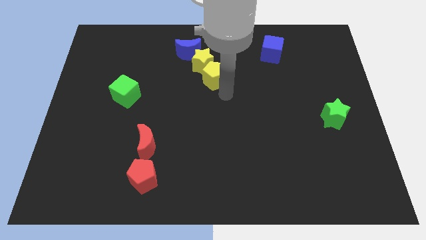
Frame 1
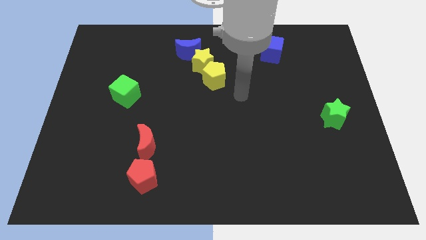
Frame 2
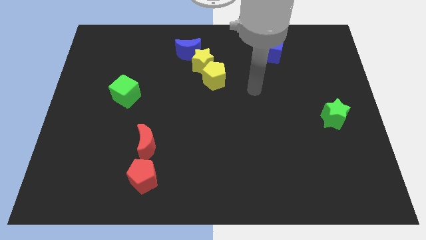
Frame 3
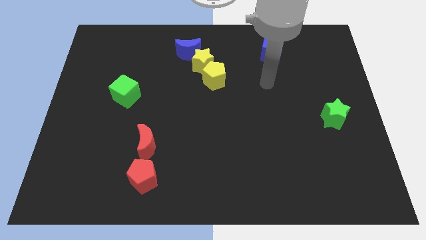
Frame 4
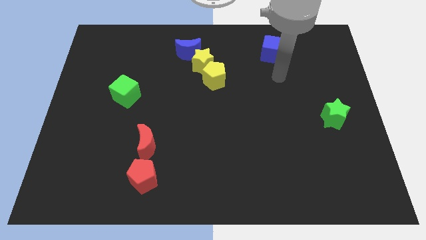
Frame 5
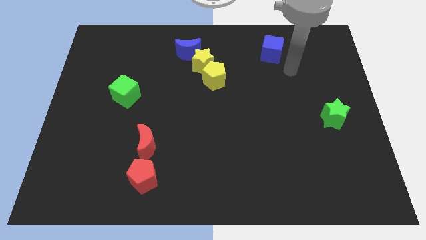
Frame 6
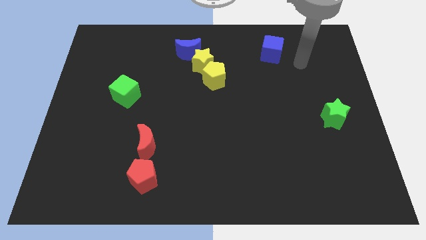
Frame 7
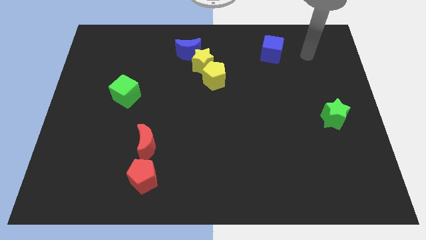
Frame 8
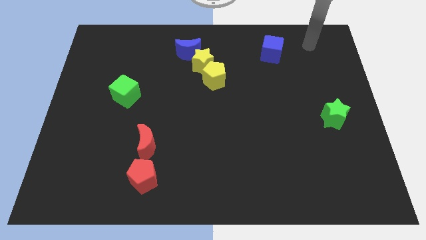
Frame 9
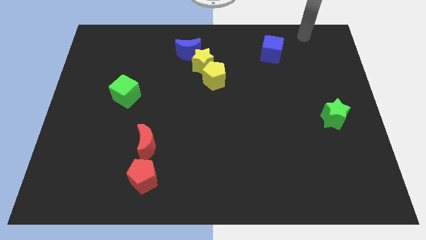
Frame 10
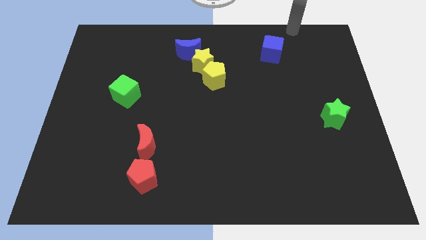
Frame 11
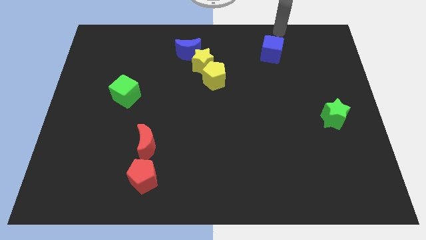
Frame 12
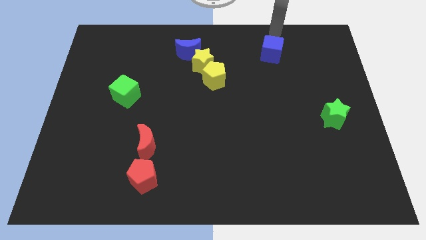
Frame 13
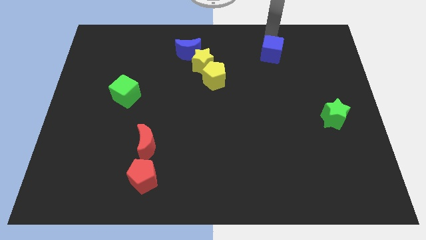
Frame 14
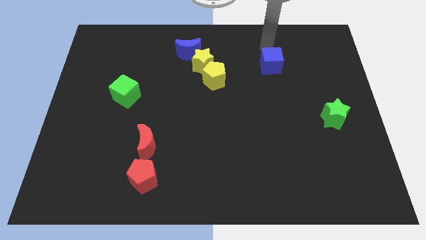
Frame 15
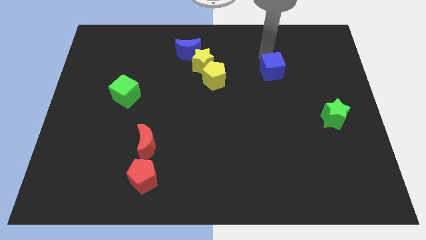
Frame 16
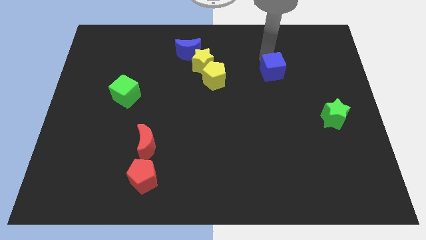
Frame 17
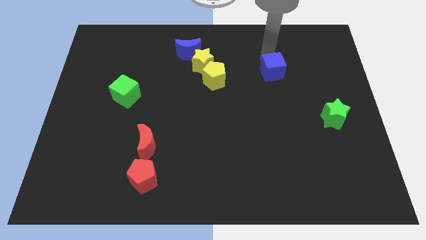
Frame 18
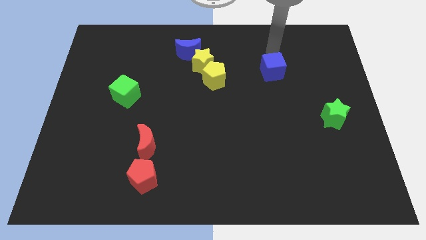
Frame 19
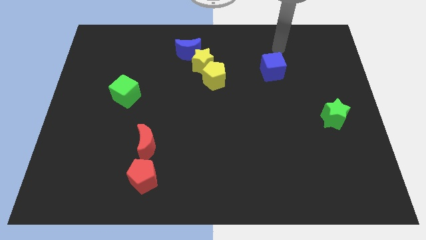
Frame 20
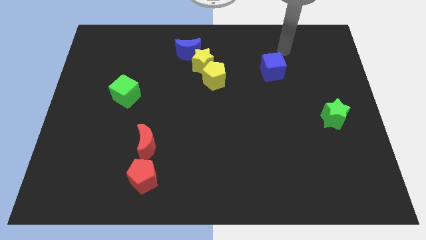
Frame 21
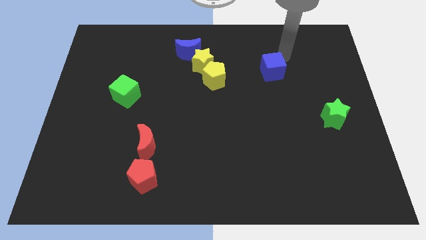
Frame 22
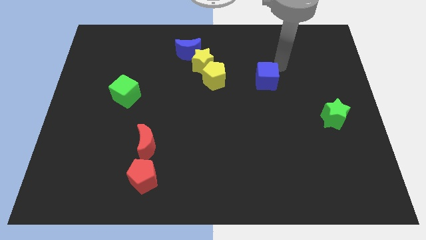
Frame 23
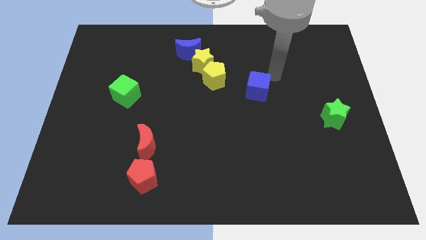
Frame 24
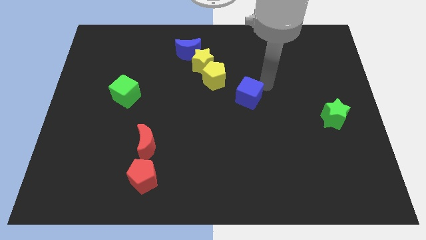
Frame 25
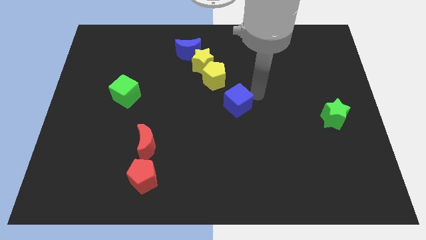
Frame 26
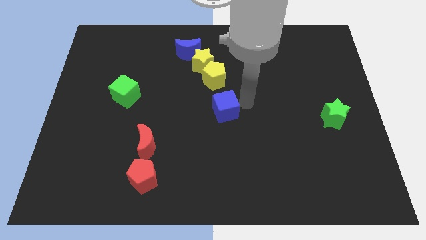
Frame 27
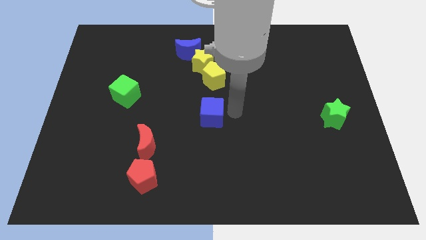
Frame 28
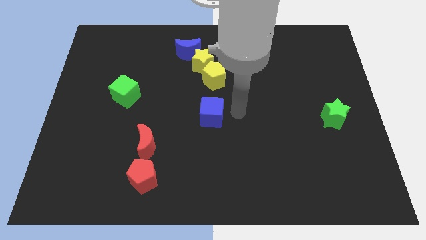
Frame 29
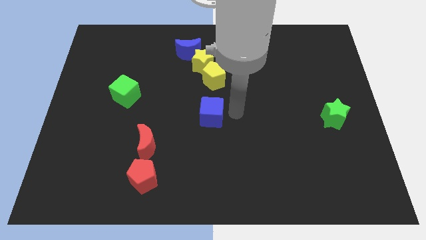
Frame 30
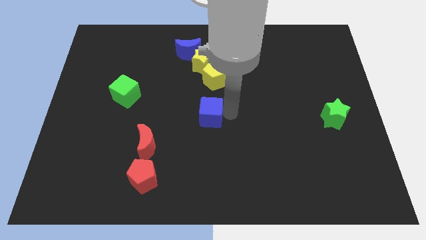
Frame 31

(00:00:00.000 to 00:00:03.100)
move the blue cube to the center of the board

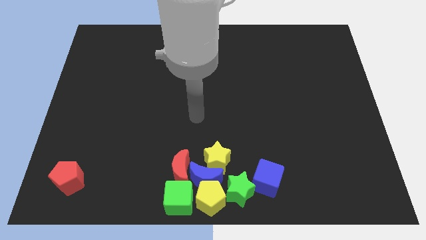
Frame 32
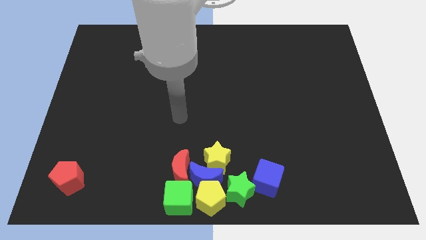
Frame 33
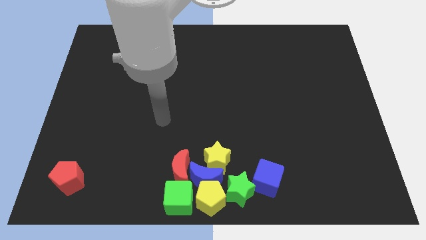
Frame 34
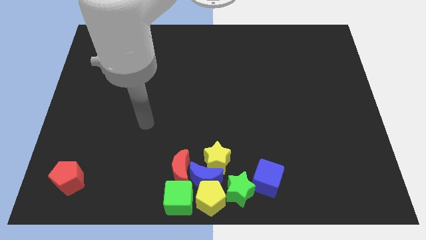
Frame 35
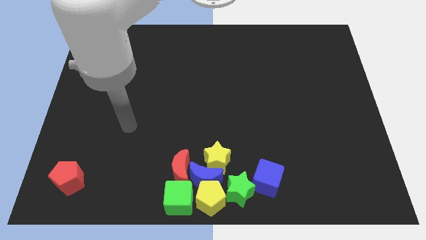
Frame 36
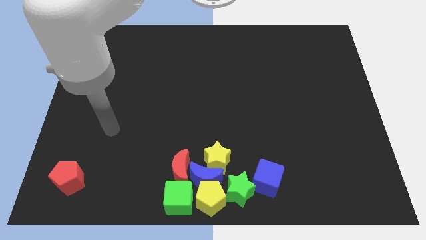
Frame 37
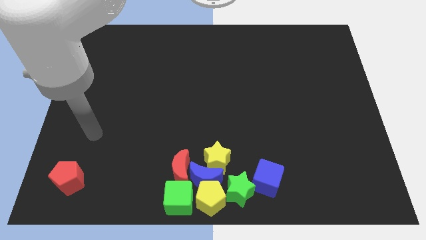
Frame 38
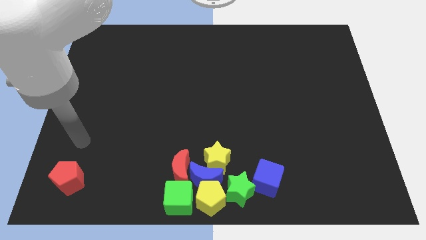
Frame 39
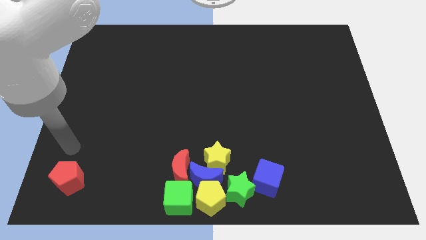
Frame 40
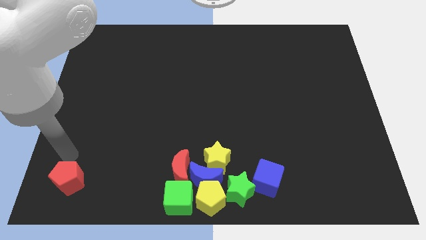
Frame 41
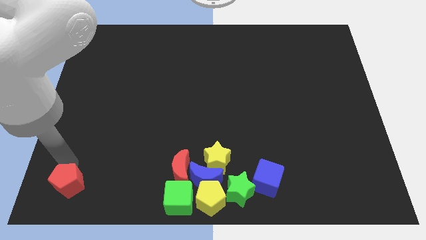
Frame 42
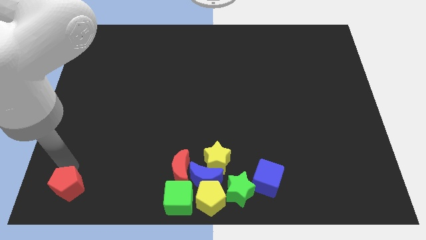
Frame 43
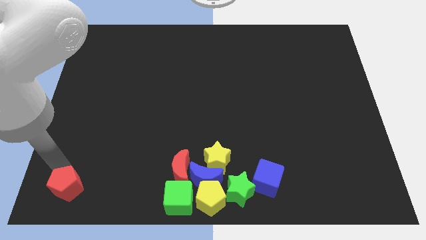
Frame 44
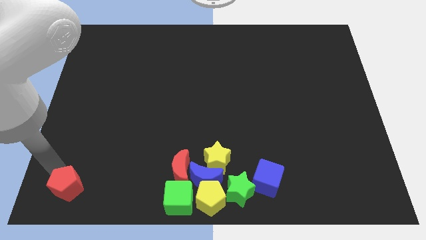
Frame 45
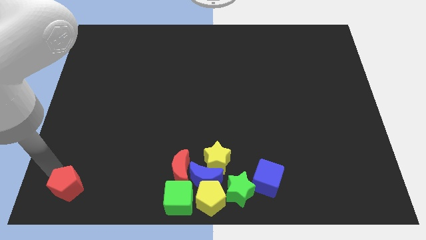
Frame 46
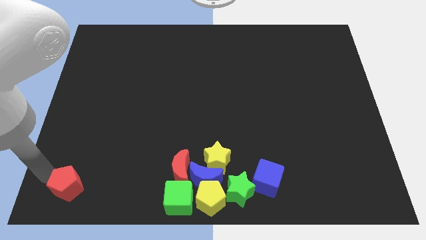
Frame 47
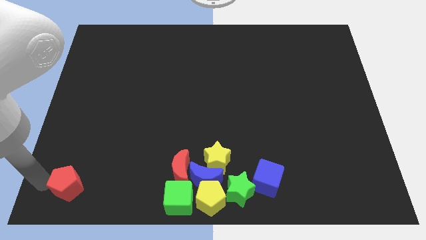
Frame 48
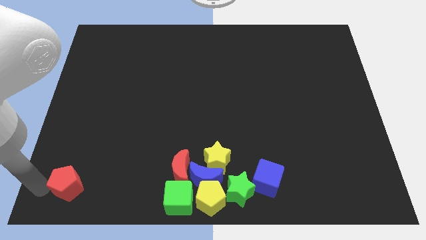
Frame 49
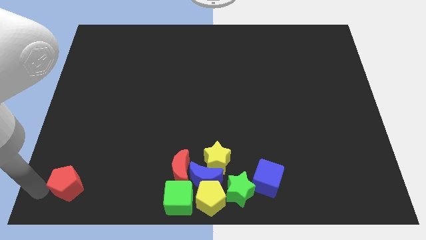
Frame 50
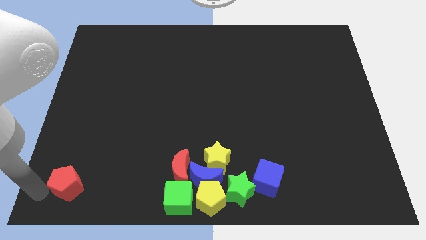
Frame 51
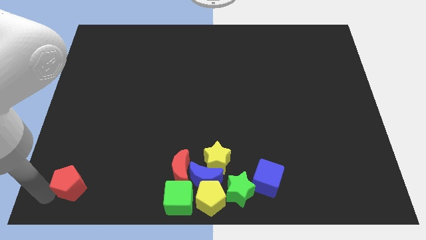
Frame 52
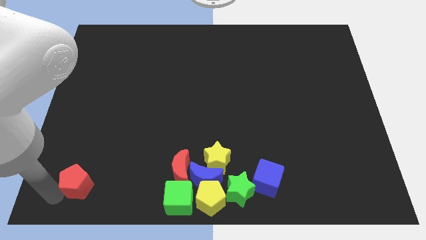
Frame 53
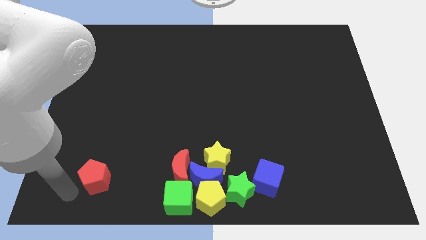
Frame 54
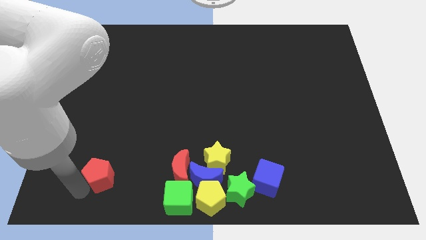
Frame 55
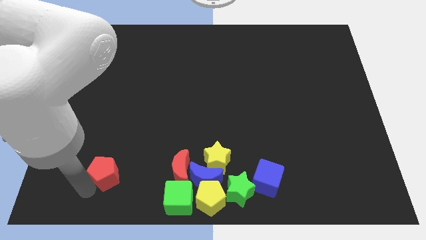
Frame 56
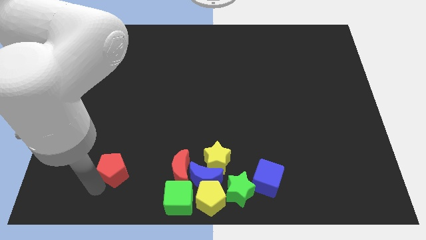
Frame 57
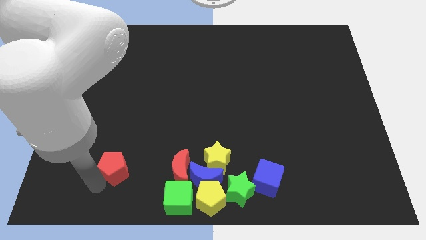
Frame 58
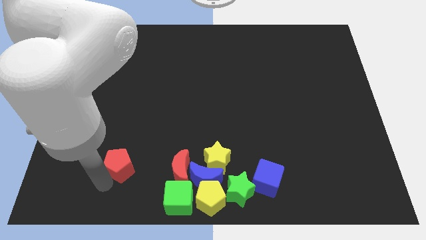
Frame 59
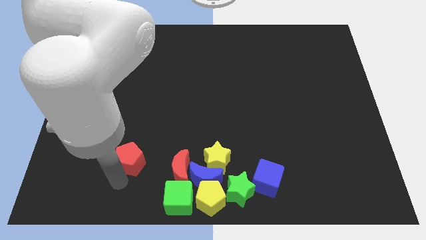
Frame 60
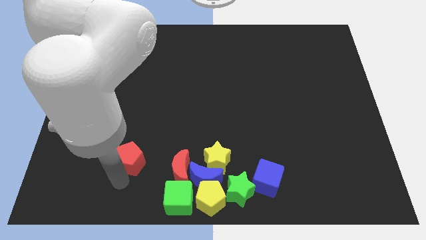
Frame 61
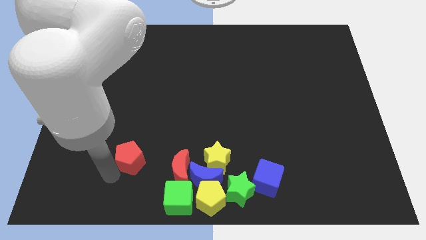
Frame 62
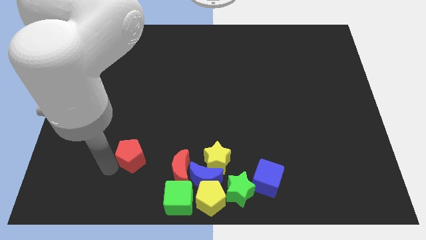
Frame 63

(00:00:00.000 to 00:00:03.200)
place the red pentagon left to the red moon

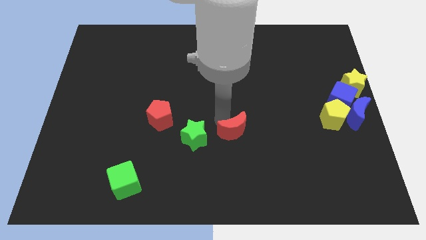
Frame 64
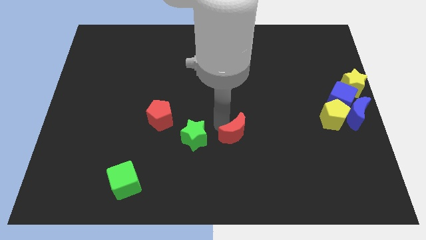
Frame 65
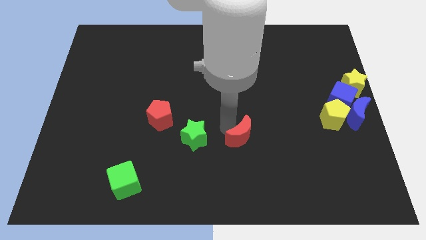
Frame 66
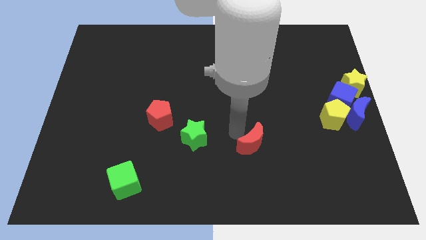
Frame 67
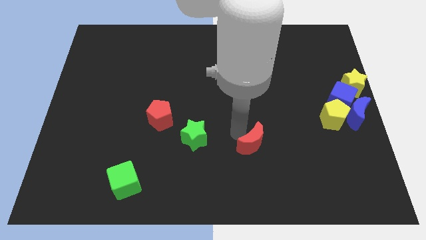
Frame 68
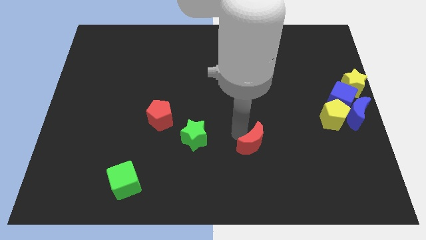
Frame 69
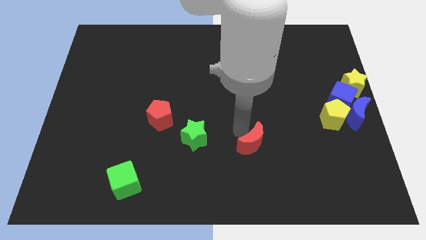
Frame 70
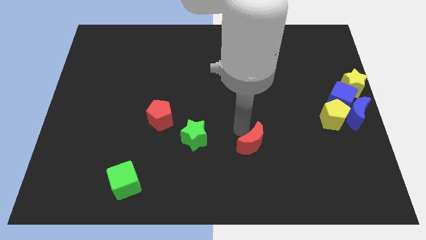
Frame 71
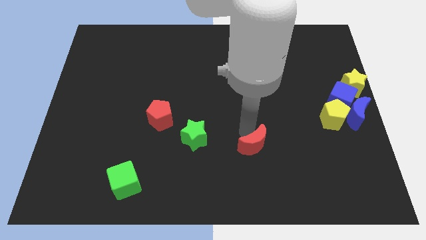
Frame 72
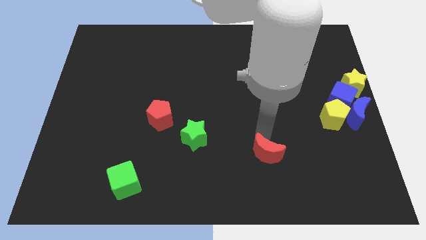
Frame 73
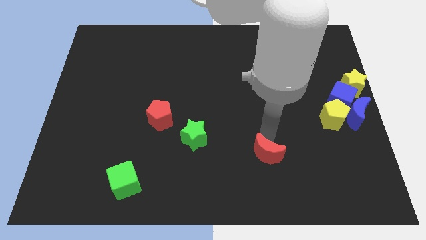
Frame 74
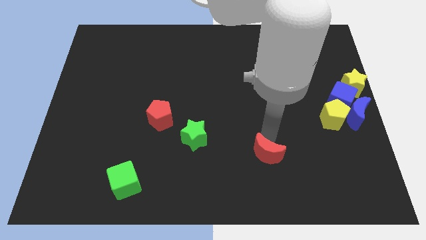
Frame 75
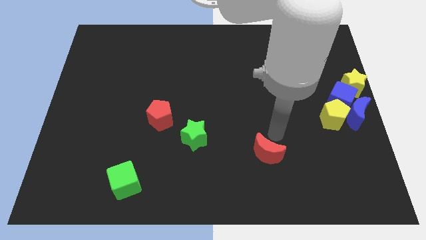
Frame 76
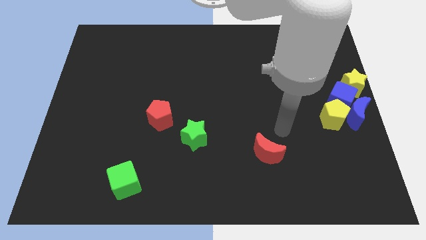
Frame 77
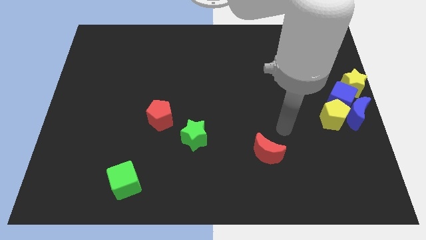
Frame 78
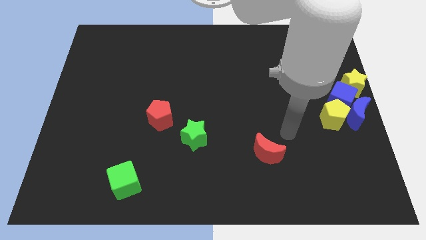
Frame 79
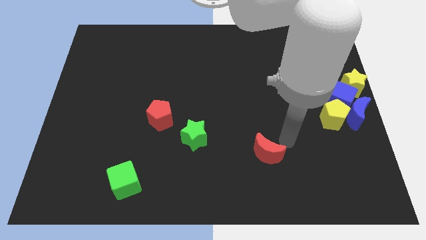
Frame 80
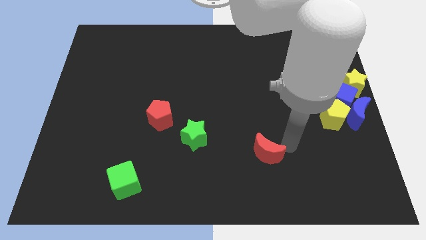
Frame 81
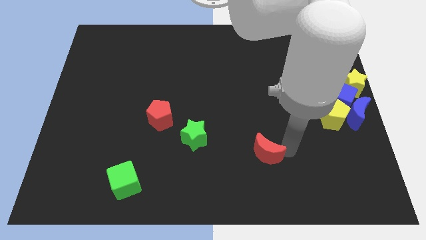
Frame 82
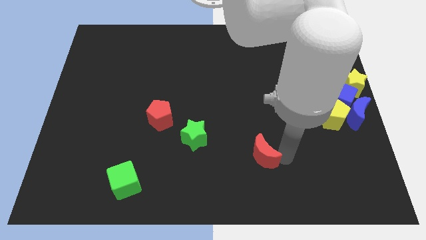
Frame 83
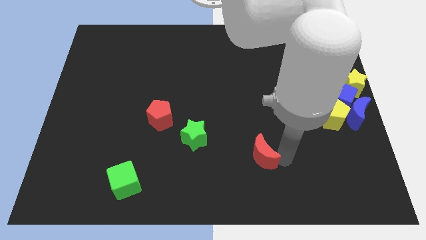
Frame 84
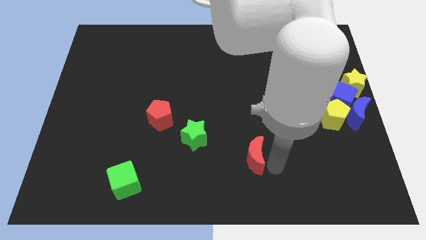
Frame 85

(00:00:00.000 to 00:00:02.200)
push the red moon towards the bottom left corner of the board

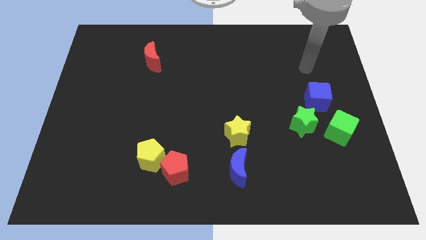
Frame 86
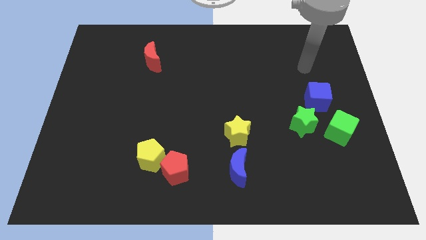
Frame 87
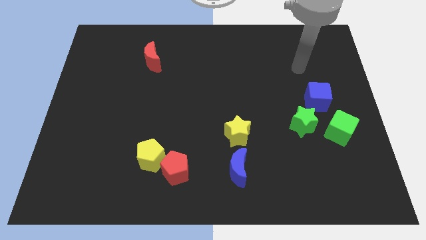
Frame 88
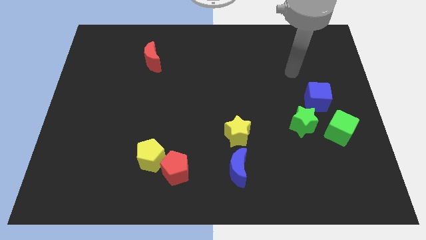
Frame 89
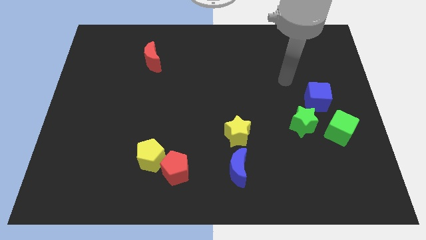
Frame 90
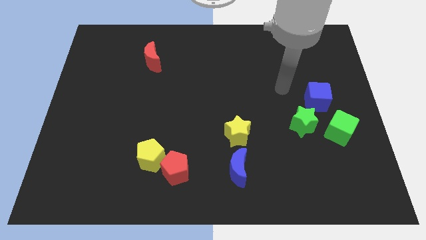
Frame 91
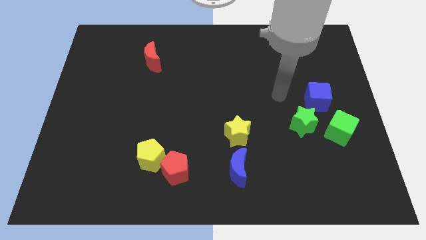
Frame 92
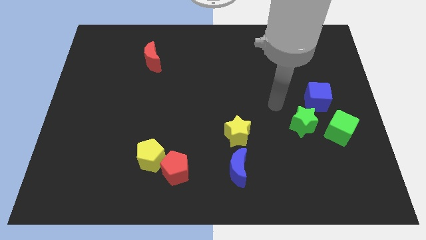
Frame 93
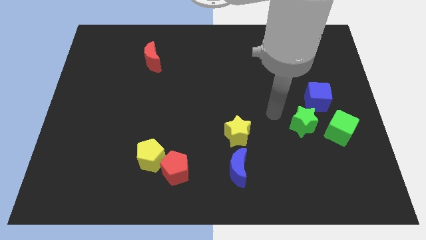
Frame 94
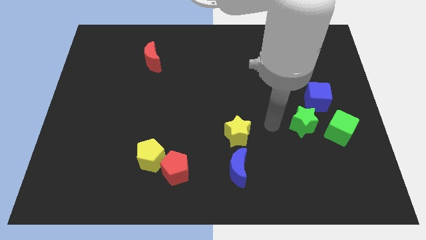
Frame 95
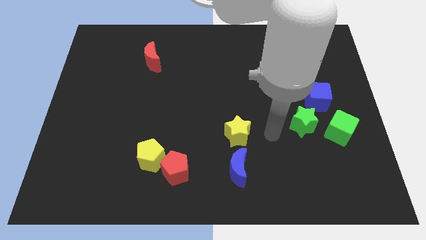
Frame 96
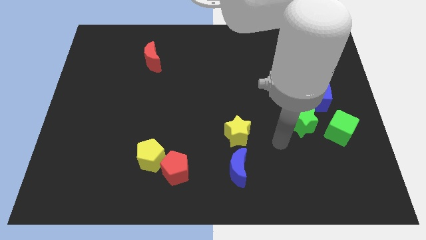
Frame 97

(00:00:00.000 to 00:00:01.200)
place your arm in between the yellow star and green star
